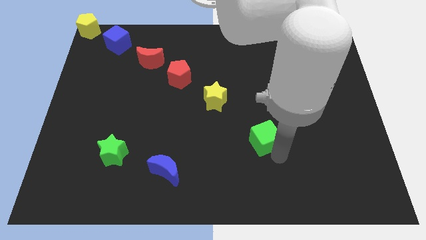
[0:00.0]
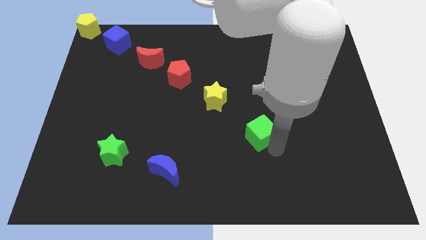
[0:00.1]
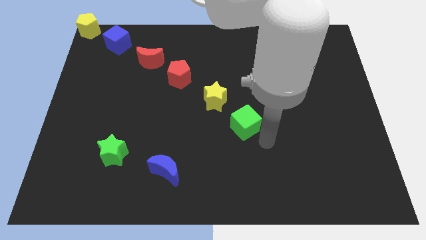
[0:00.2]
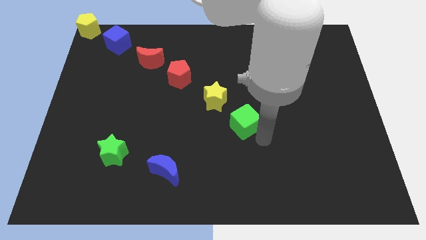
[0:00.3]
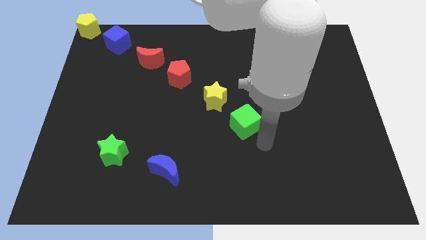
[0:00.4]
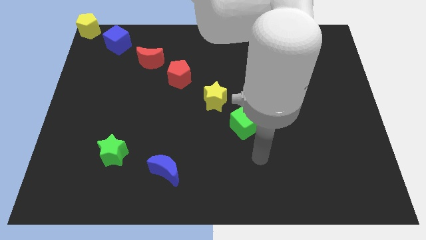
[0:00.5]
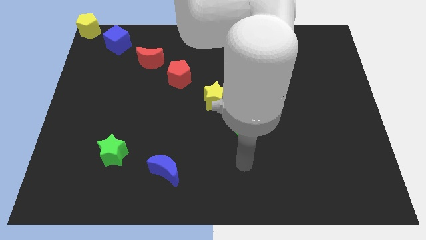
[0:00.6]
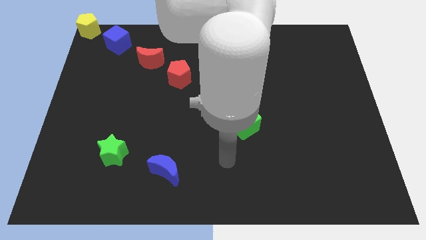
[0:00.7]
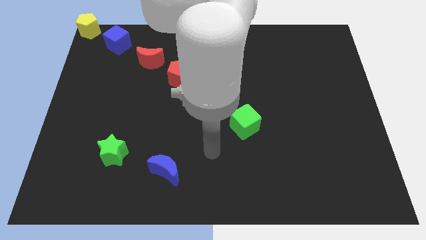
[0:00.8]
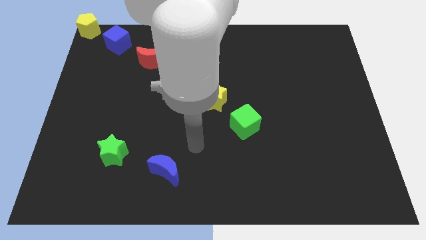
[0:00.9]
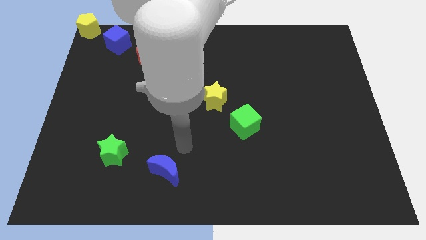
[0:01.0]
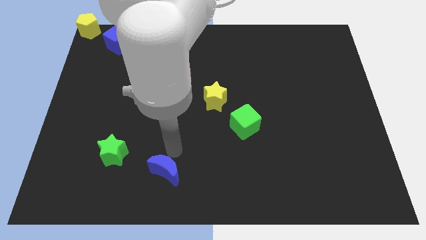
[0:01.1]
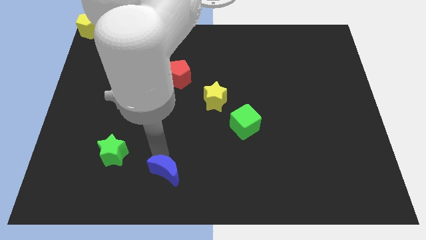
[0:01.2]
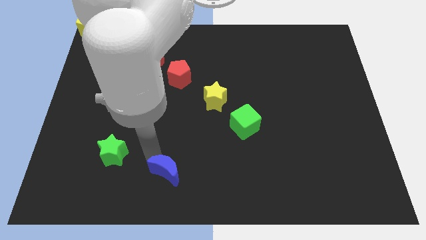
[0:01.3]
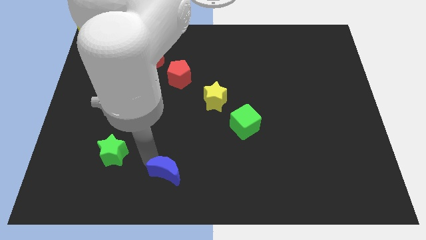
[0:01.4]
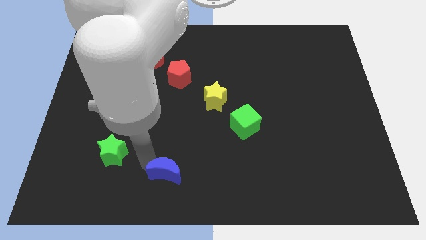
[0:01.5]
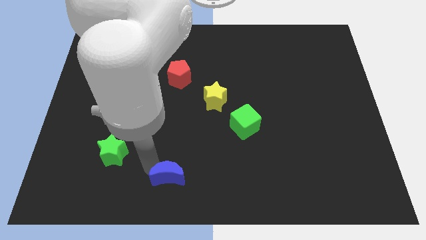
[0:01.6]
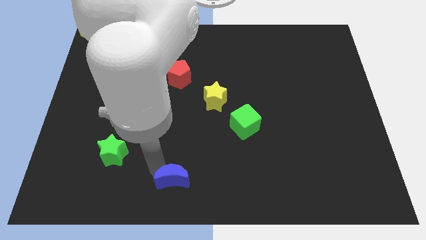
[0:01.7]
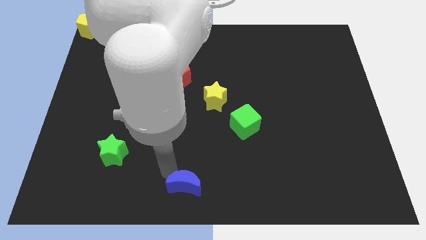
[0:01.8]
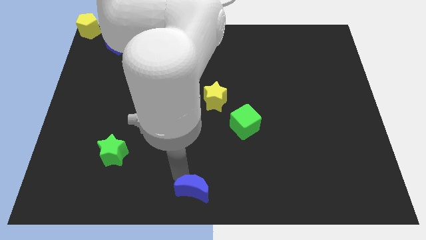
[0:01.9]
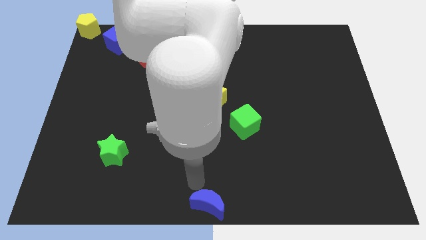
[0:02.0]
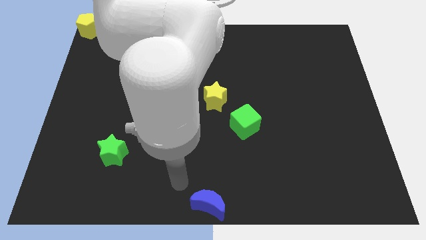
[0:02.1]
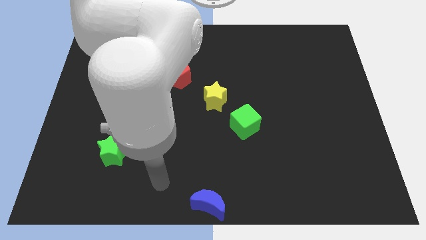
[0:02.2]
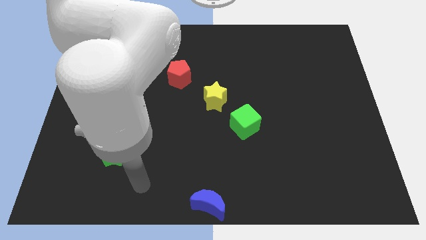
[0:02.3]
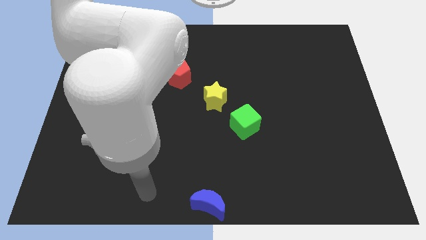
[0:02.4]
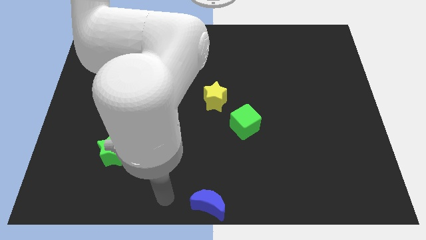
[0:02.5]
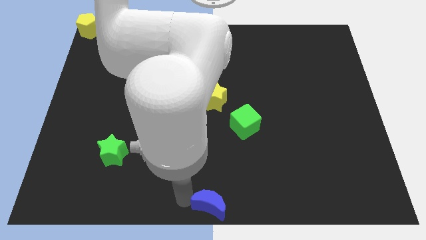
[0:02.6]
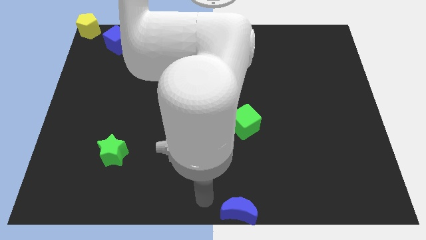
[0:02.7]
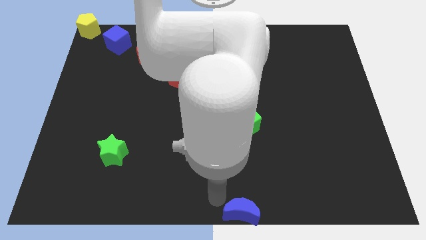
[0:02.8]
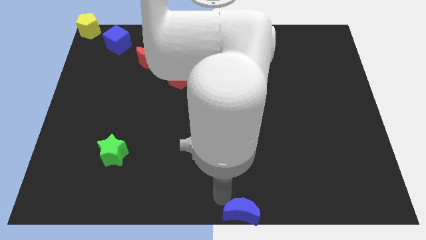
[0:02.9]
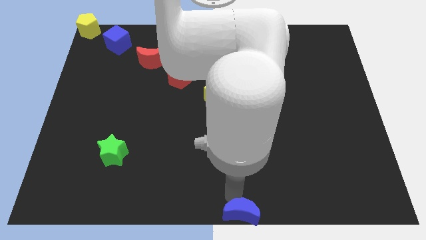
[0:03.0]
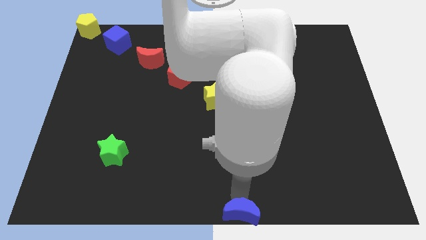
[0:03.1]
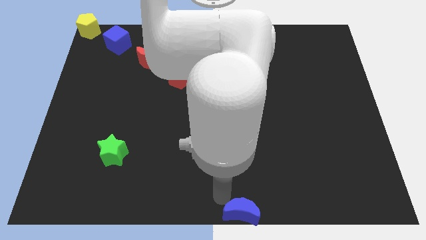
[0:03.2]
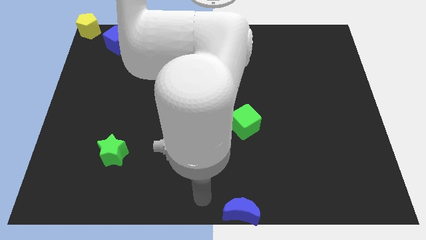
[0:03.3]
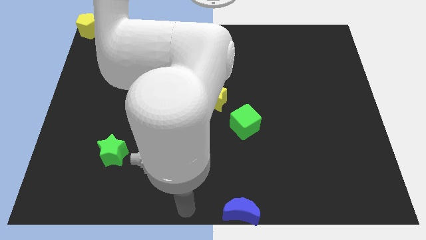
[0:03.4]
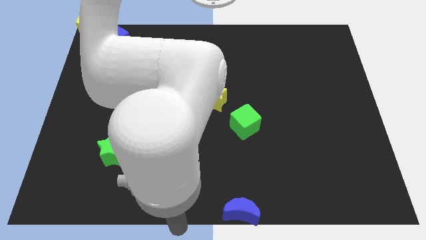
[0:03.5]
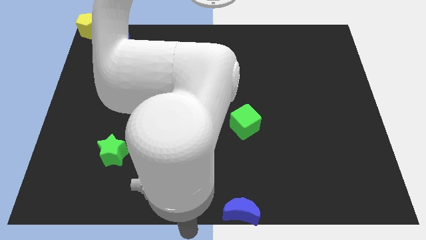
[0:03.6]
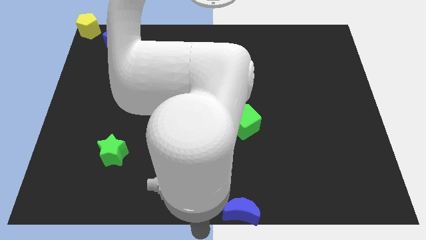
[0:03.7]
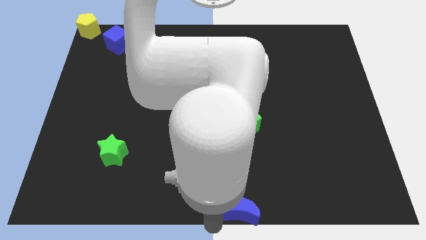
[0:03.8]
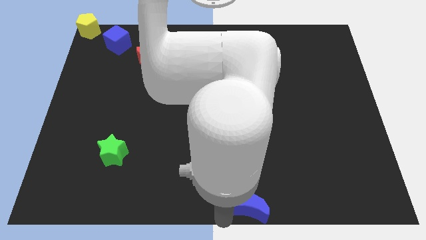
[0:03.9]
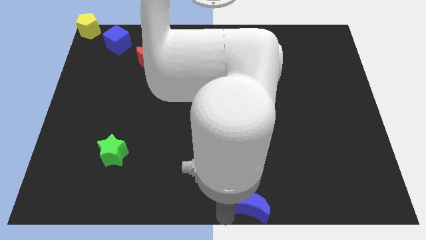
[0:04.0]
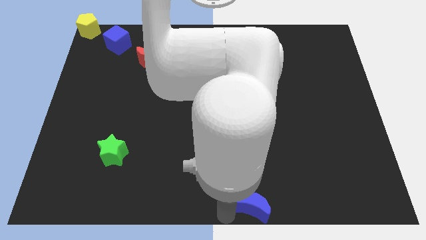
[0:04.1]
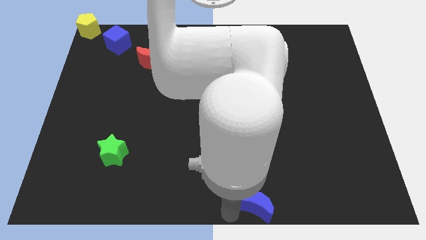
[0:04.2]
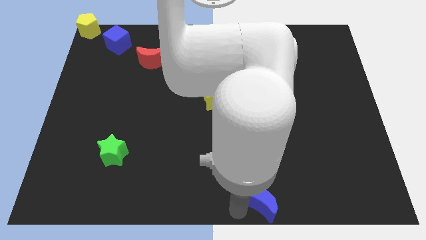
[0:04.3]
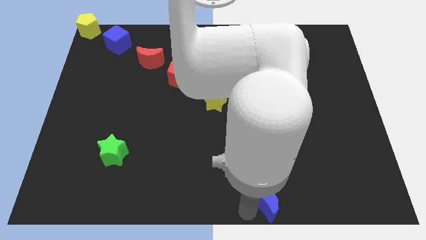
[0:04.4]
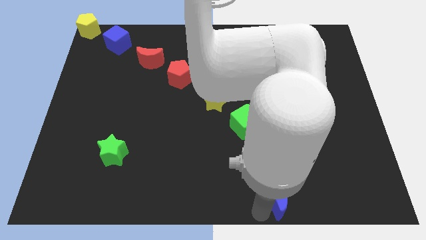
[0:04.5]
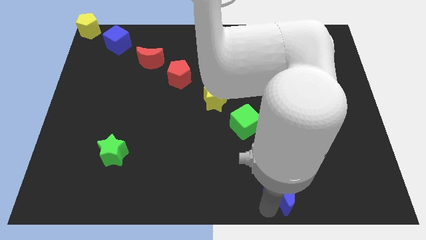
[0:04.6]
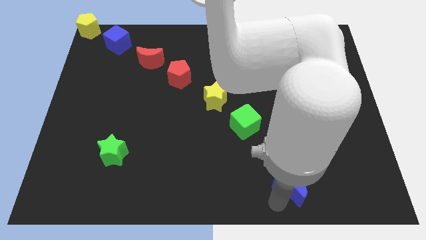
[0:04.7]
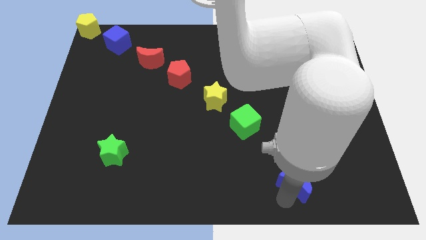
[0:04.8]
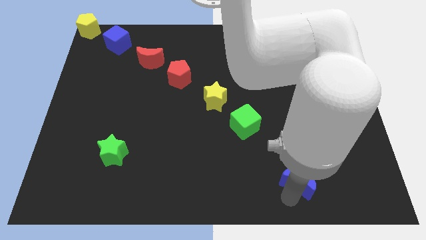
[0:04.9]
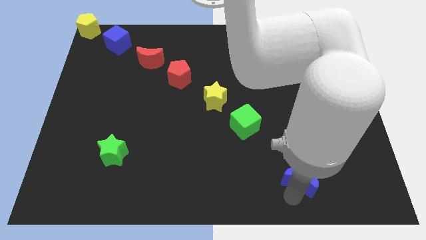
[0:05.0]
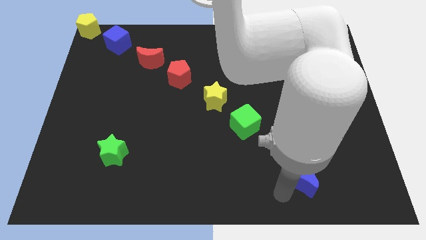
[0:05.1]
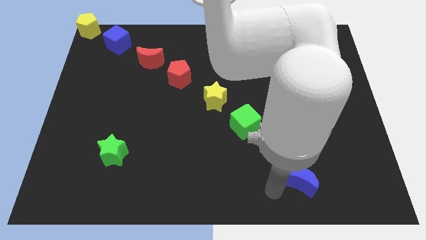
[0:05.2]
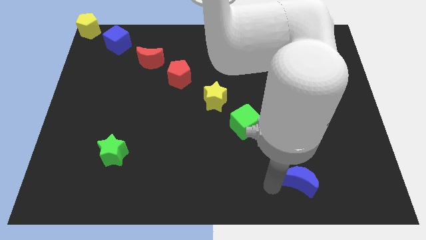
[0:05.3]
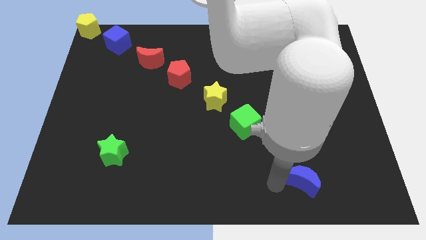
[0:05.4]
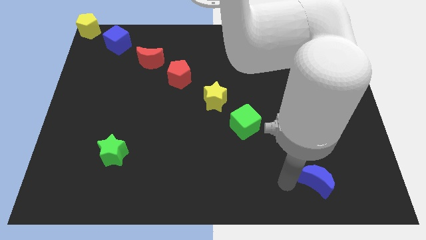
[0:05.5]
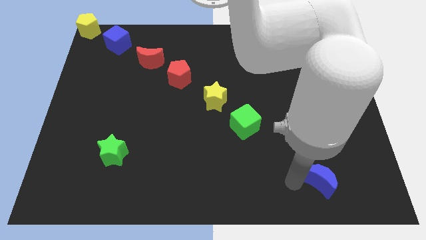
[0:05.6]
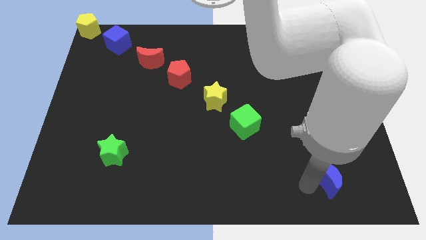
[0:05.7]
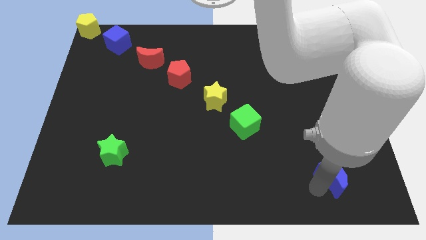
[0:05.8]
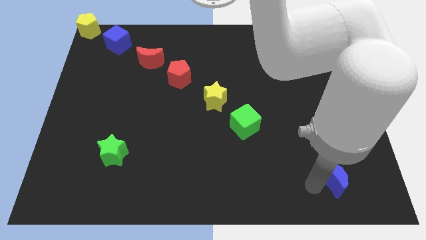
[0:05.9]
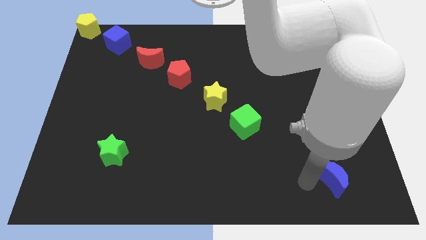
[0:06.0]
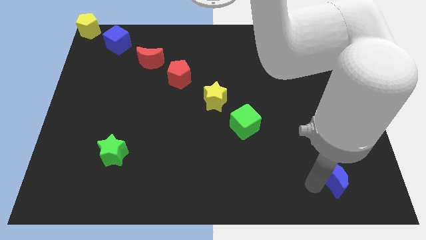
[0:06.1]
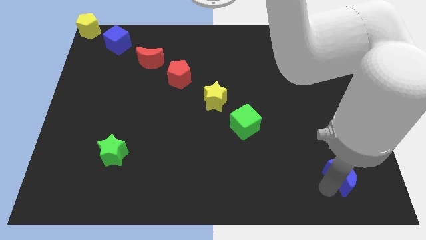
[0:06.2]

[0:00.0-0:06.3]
move the blue crescent towards right bottom of the board

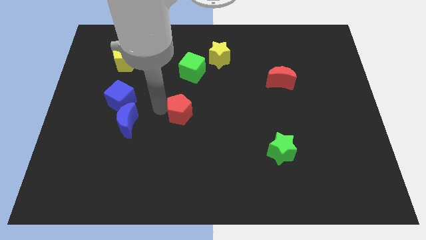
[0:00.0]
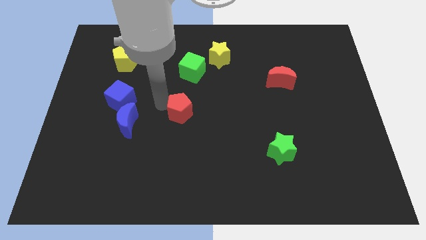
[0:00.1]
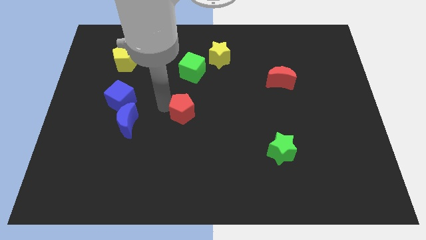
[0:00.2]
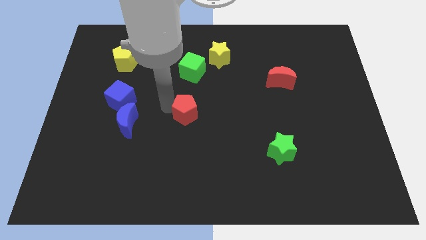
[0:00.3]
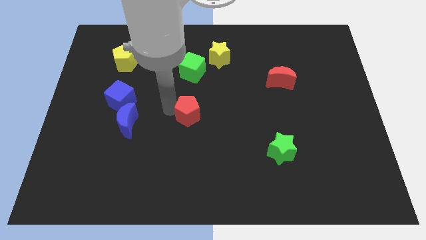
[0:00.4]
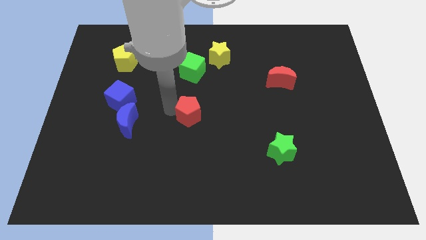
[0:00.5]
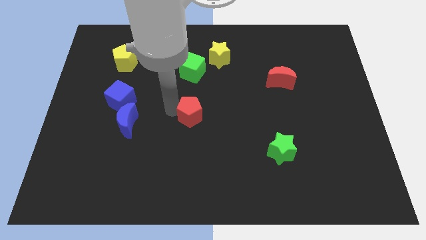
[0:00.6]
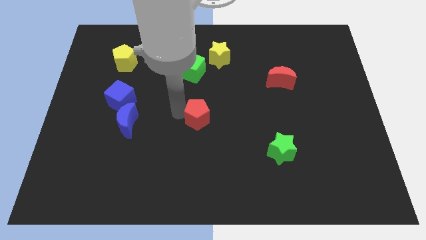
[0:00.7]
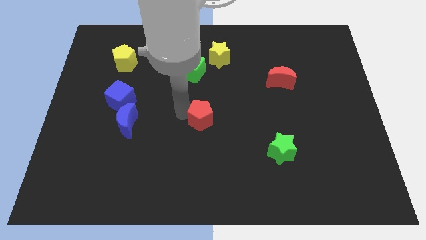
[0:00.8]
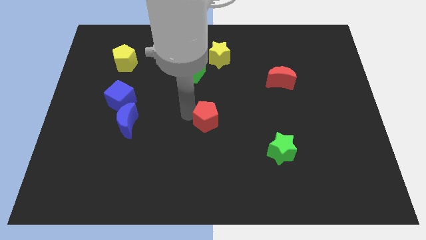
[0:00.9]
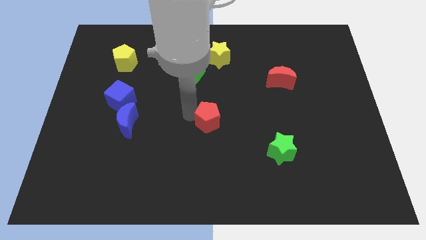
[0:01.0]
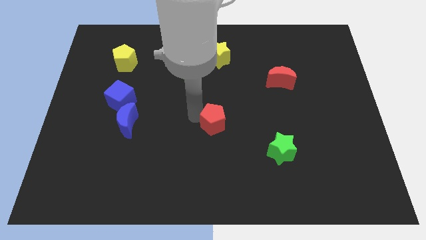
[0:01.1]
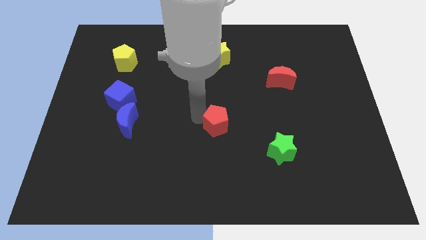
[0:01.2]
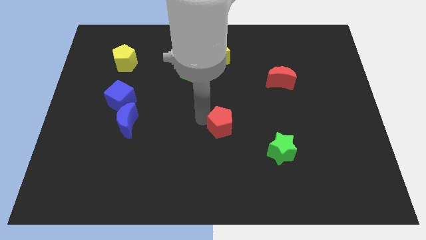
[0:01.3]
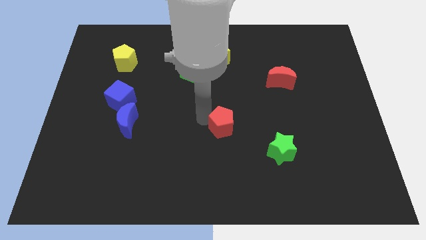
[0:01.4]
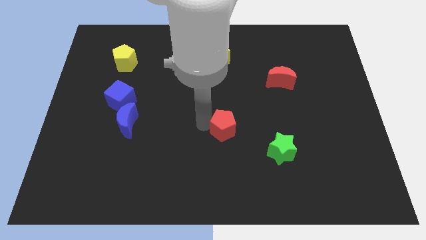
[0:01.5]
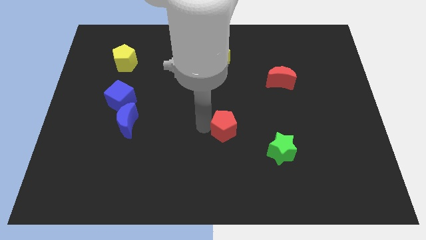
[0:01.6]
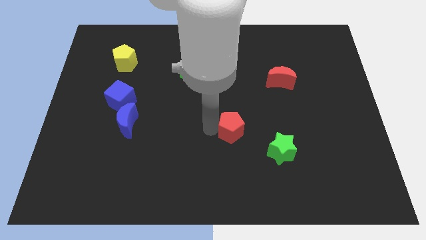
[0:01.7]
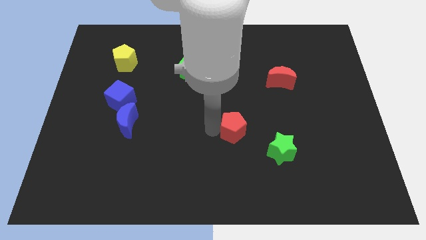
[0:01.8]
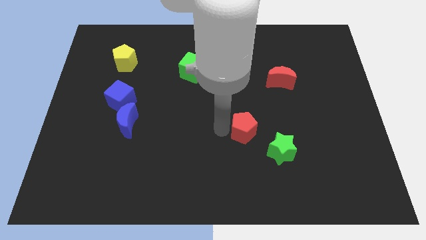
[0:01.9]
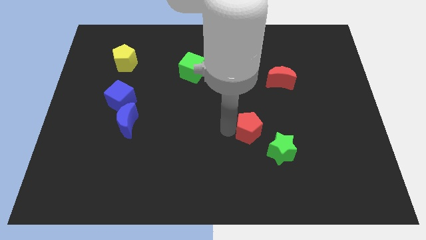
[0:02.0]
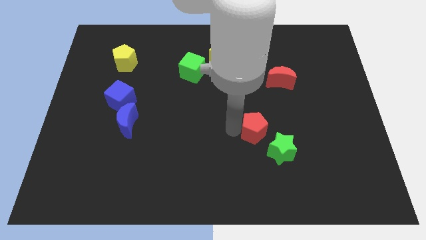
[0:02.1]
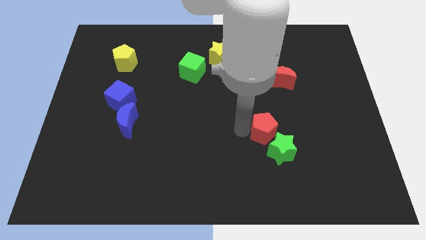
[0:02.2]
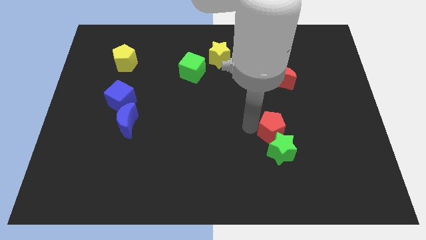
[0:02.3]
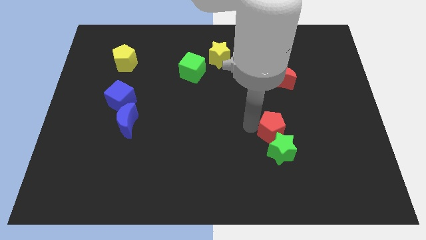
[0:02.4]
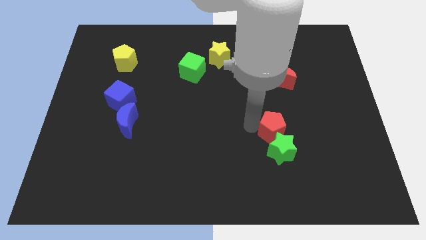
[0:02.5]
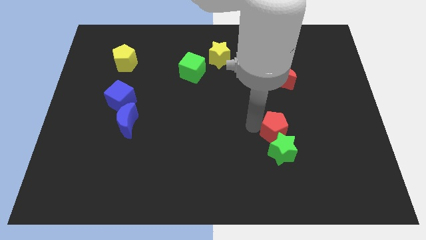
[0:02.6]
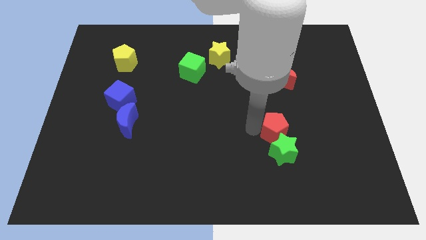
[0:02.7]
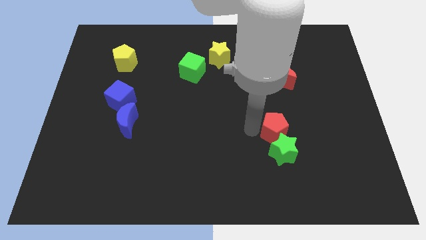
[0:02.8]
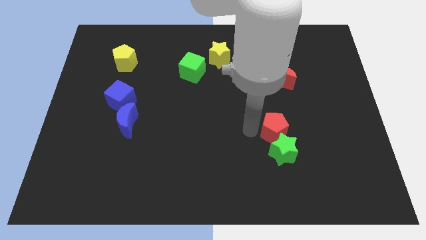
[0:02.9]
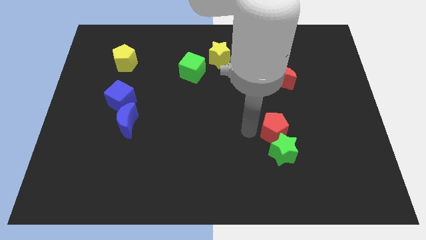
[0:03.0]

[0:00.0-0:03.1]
place red pentagon on top of green star
